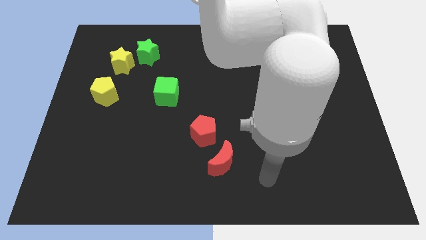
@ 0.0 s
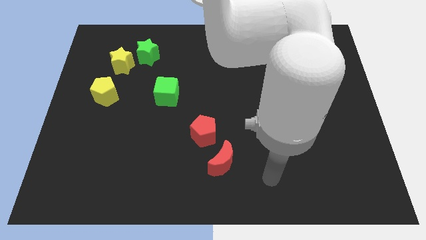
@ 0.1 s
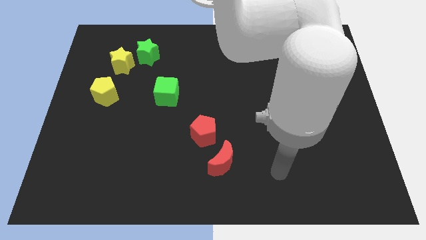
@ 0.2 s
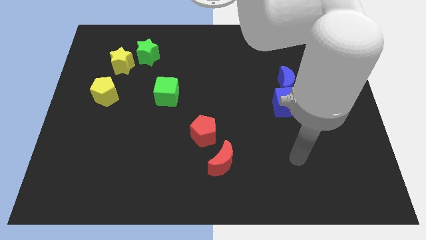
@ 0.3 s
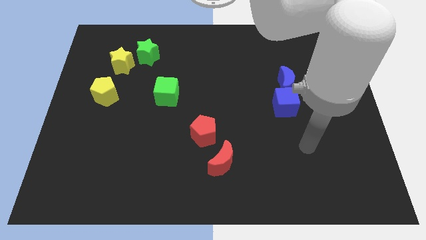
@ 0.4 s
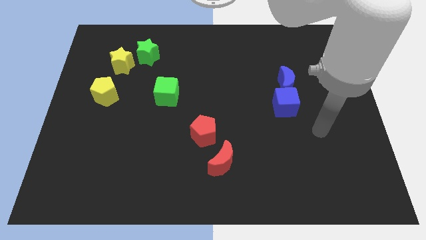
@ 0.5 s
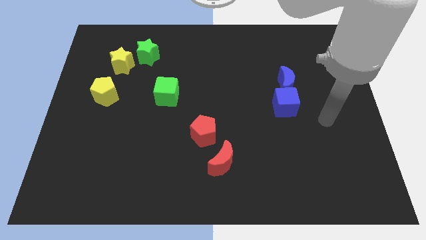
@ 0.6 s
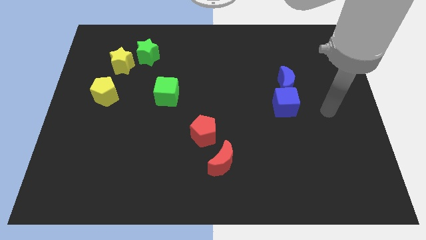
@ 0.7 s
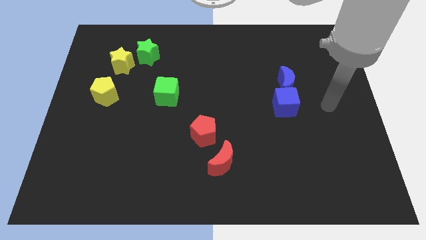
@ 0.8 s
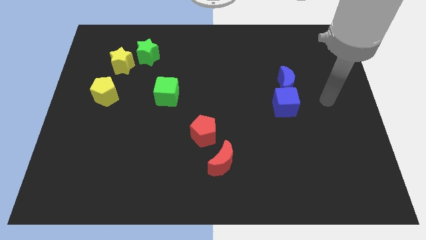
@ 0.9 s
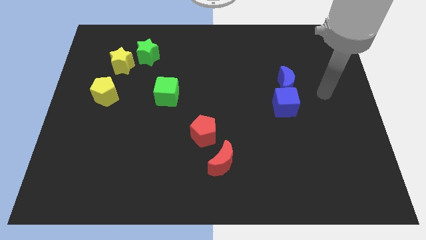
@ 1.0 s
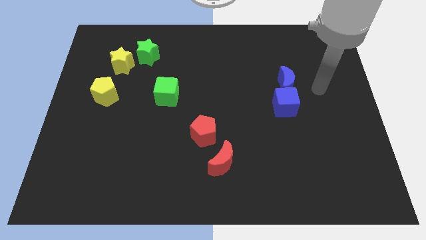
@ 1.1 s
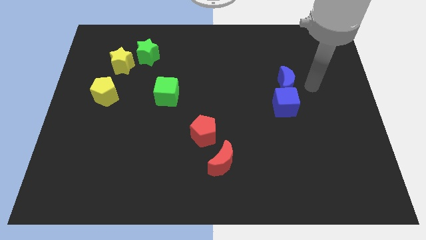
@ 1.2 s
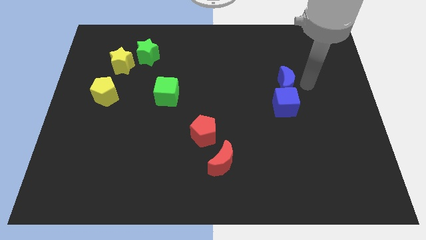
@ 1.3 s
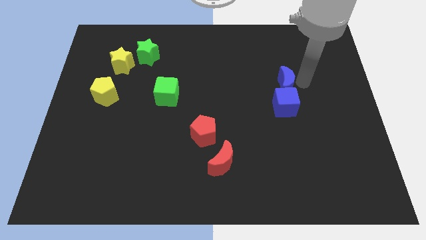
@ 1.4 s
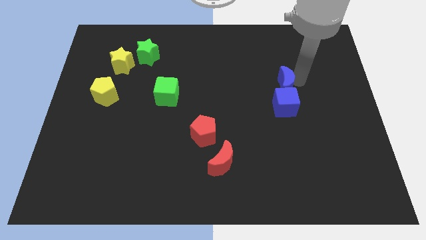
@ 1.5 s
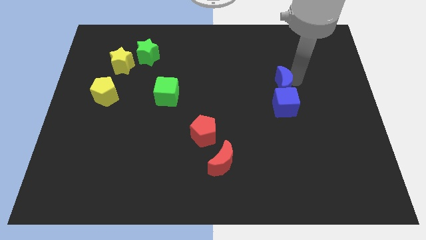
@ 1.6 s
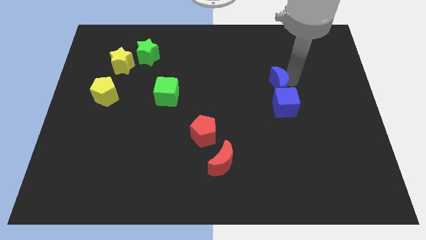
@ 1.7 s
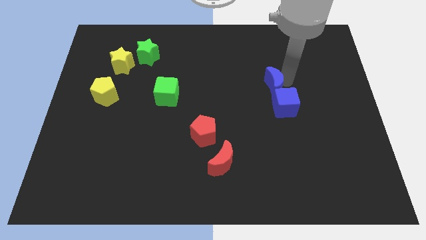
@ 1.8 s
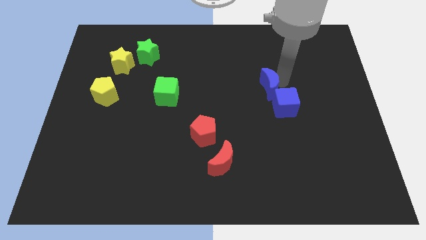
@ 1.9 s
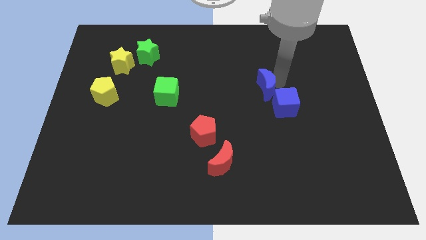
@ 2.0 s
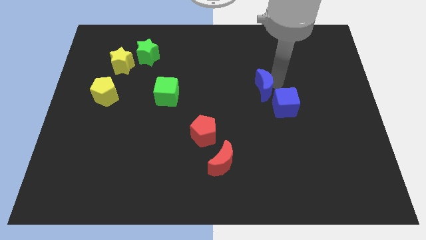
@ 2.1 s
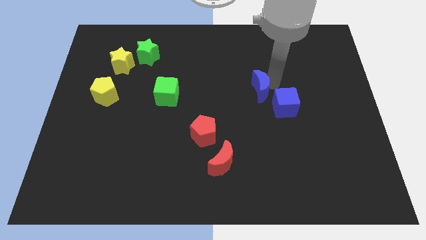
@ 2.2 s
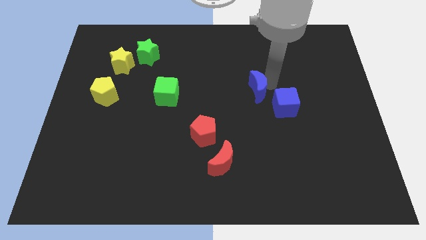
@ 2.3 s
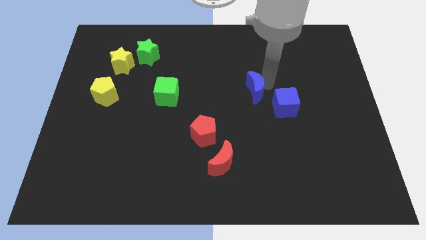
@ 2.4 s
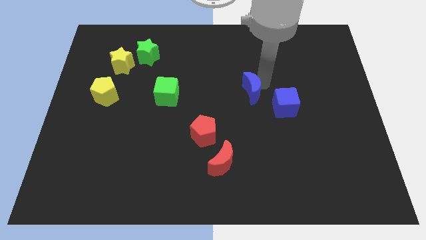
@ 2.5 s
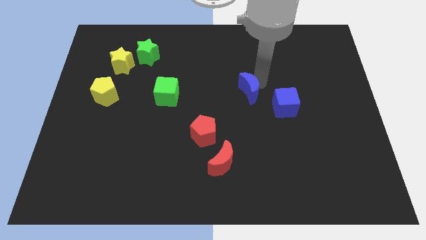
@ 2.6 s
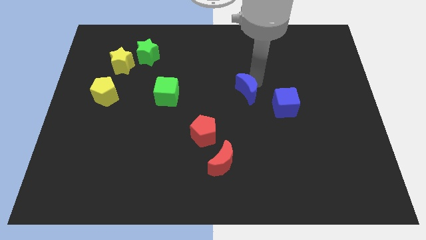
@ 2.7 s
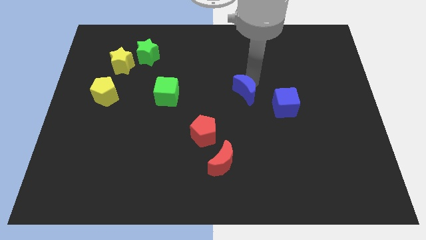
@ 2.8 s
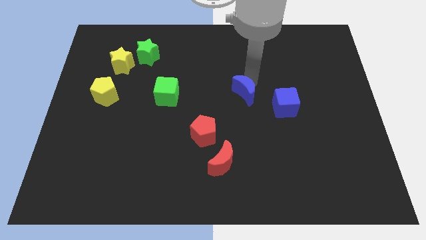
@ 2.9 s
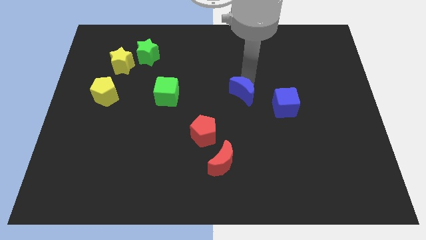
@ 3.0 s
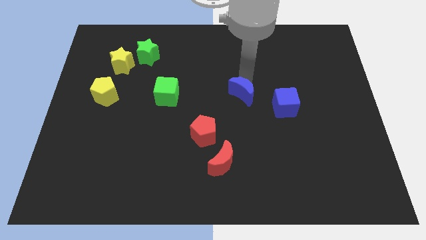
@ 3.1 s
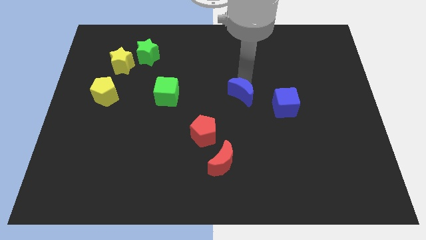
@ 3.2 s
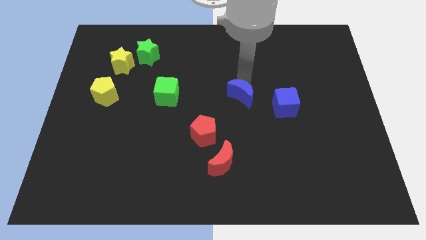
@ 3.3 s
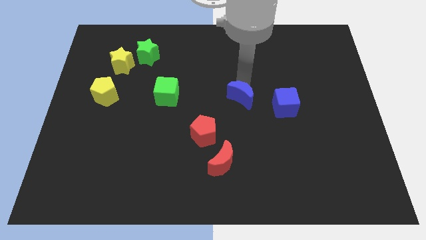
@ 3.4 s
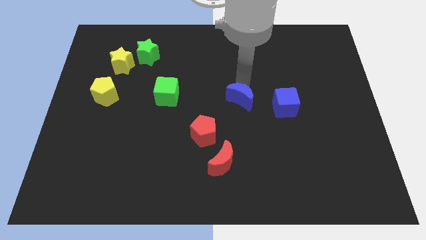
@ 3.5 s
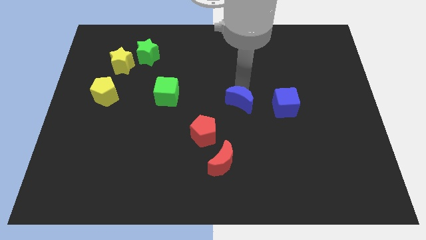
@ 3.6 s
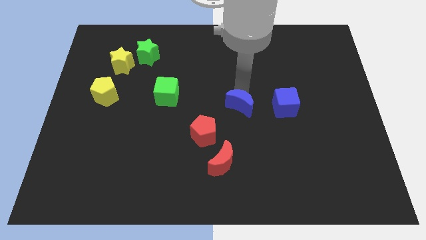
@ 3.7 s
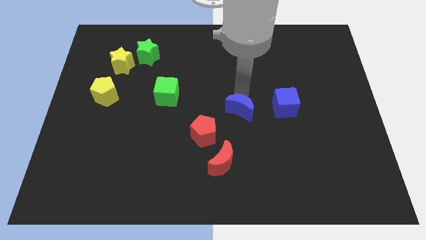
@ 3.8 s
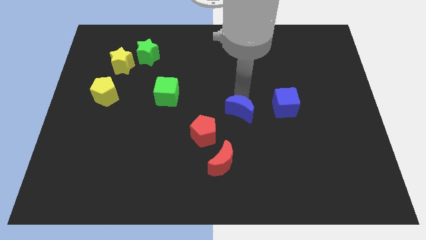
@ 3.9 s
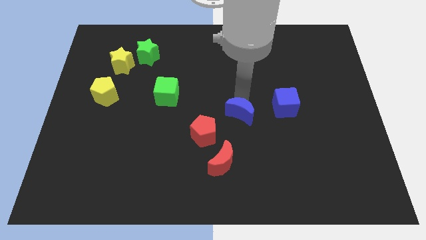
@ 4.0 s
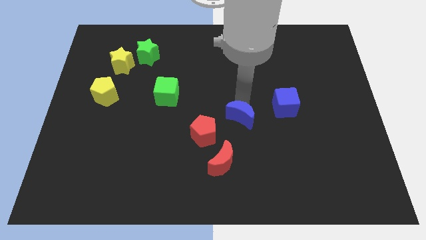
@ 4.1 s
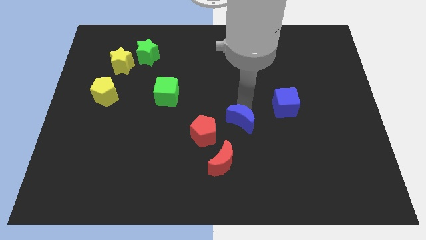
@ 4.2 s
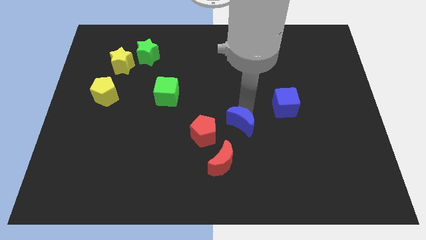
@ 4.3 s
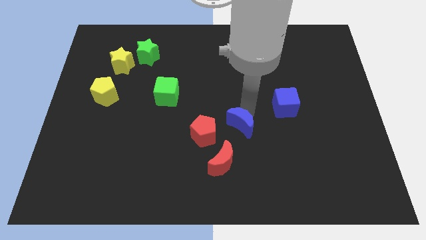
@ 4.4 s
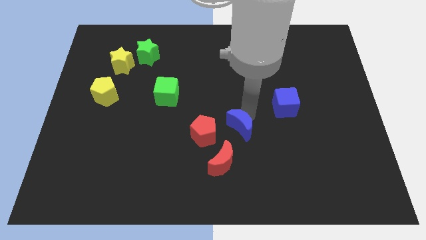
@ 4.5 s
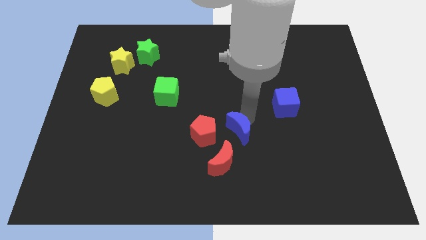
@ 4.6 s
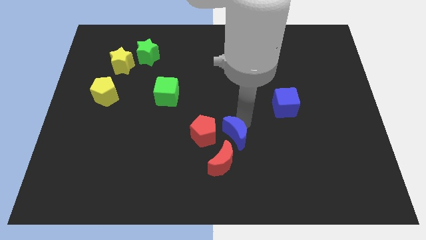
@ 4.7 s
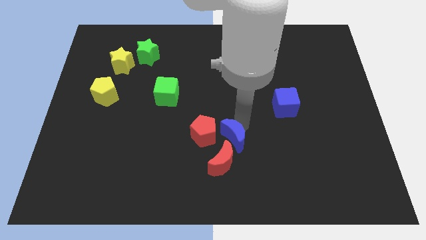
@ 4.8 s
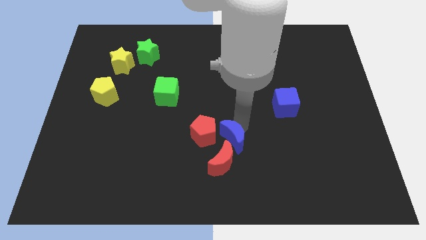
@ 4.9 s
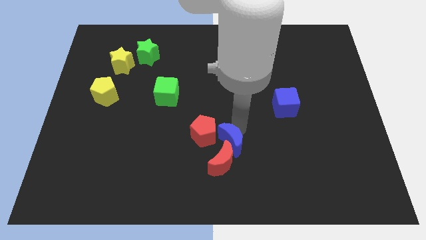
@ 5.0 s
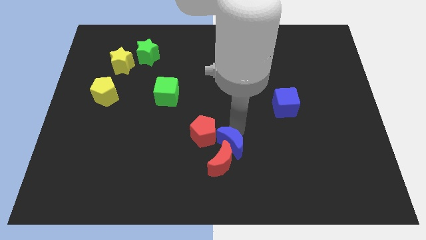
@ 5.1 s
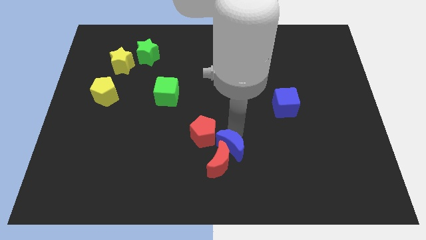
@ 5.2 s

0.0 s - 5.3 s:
slide the blue moon close to the red moon

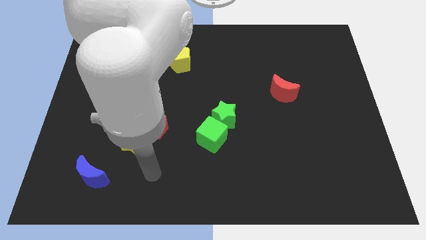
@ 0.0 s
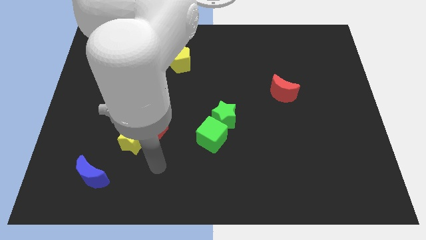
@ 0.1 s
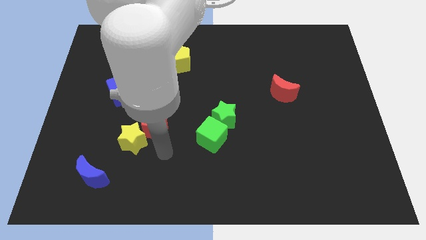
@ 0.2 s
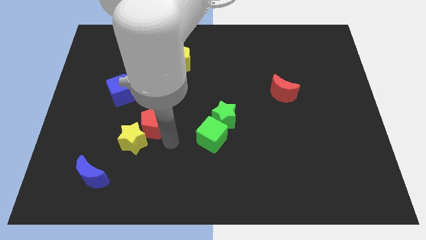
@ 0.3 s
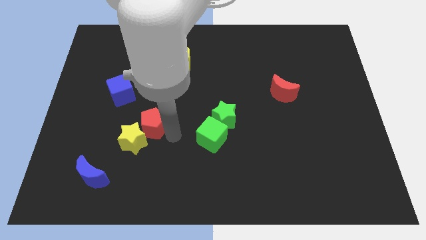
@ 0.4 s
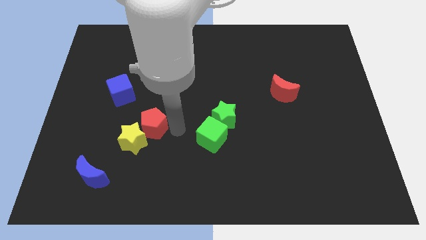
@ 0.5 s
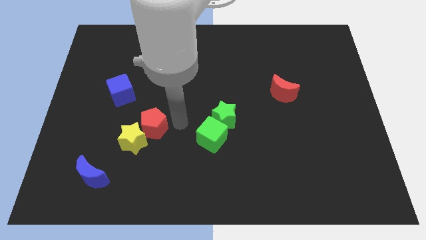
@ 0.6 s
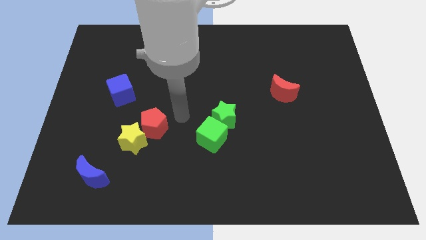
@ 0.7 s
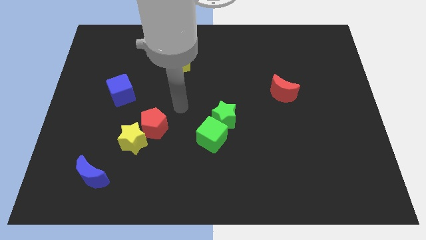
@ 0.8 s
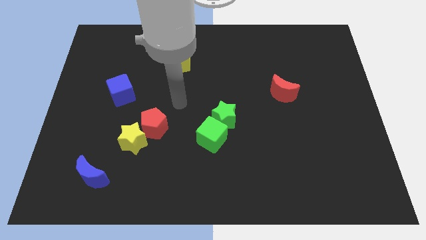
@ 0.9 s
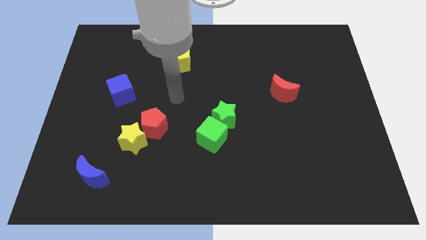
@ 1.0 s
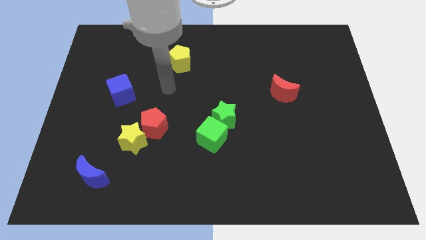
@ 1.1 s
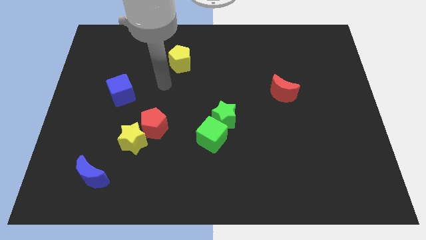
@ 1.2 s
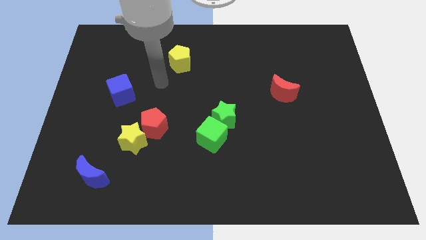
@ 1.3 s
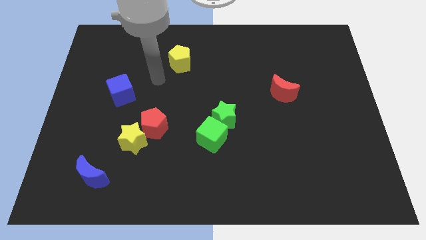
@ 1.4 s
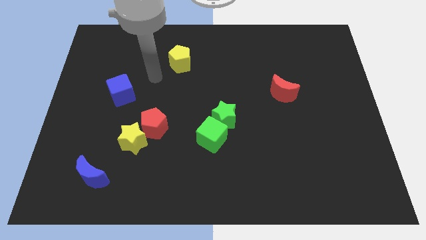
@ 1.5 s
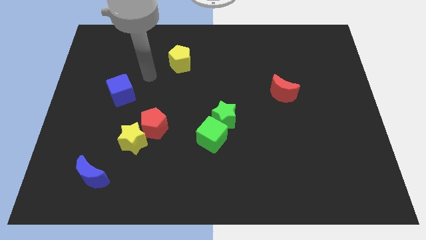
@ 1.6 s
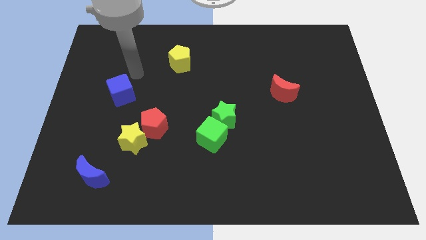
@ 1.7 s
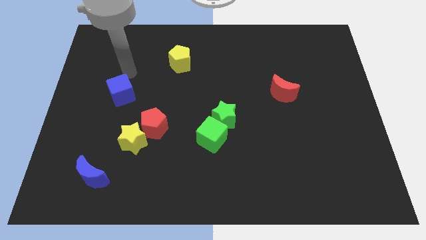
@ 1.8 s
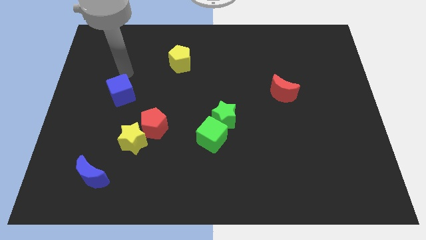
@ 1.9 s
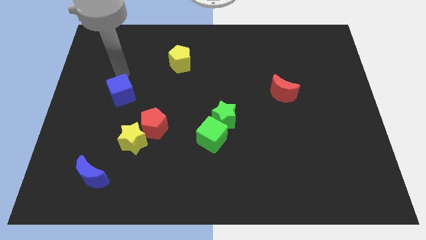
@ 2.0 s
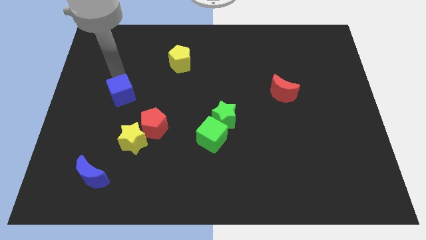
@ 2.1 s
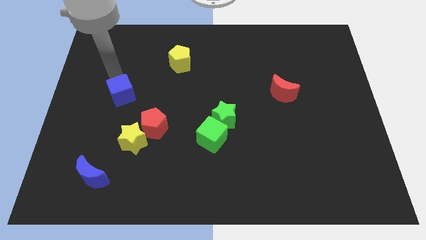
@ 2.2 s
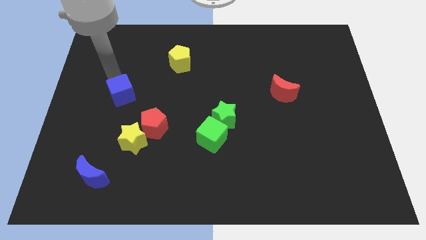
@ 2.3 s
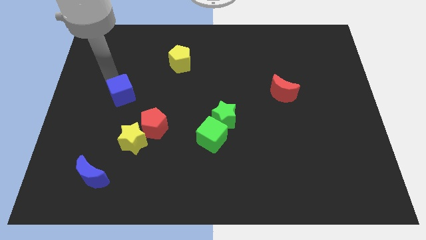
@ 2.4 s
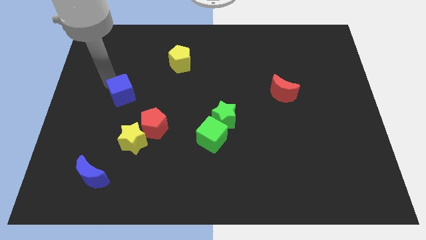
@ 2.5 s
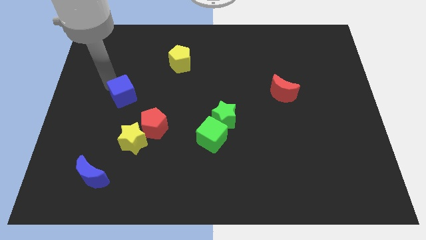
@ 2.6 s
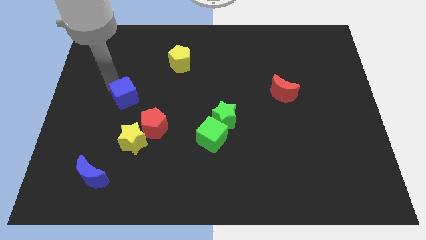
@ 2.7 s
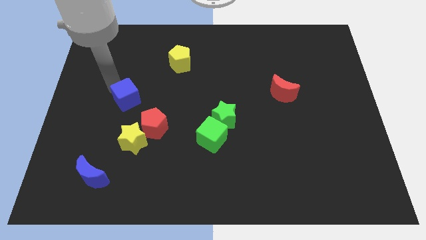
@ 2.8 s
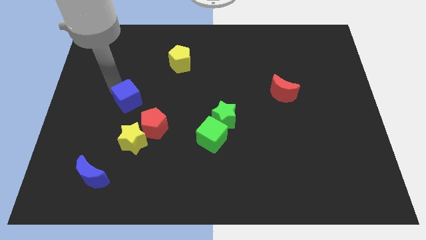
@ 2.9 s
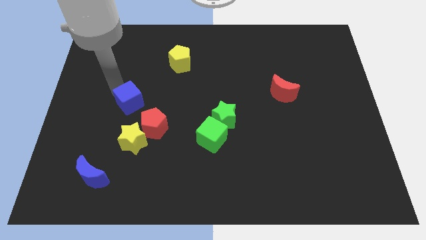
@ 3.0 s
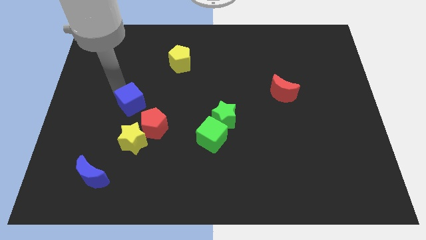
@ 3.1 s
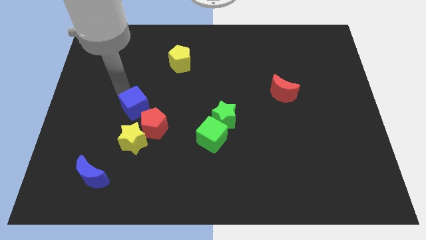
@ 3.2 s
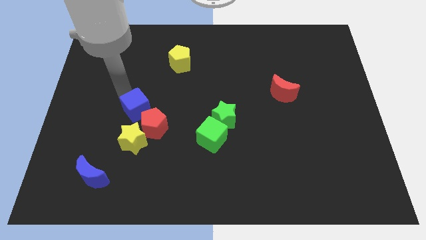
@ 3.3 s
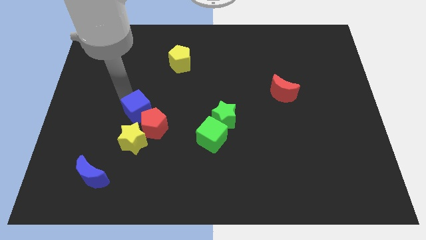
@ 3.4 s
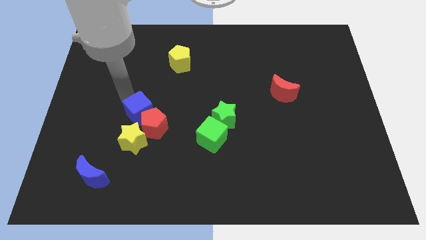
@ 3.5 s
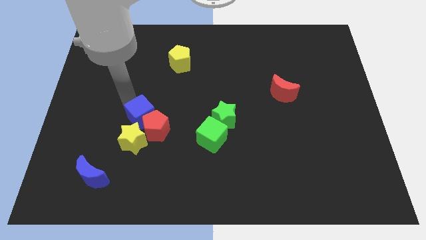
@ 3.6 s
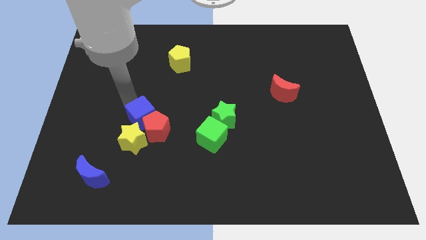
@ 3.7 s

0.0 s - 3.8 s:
move the blue cube close to the red pentagon
